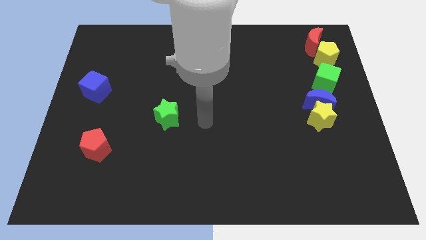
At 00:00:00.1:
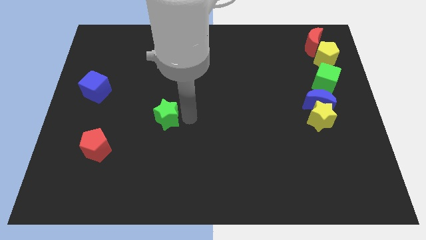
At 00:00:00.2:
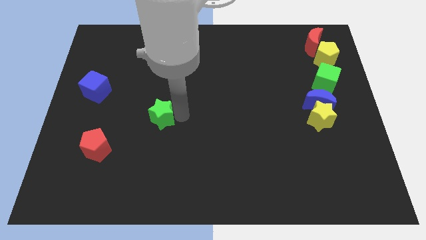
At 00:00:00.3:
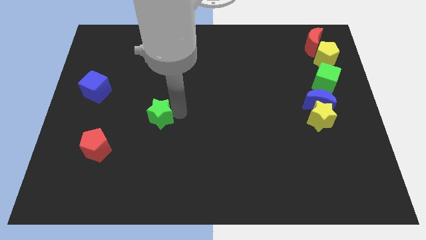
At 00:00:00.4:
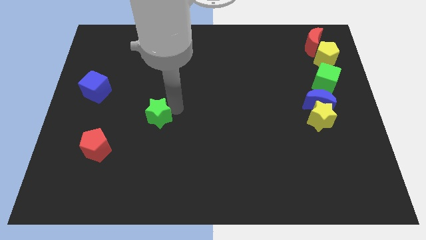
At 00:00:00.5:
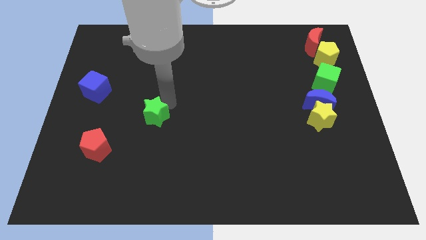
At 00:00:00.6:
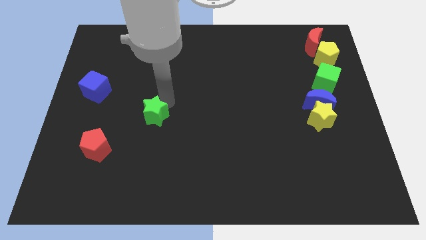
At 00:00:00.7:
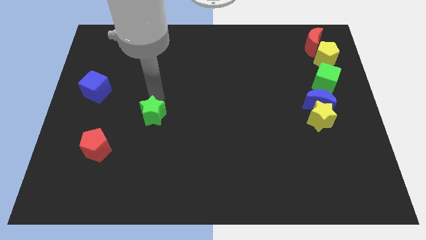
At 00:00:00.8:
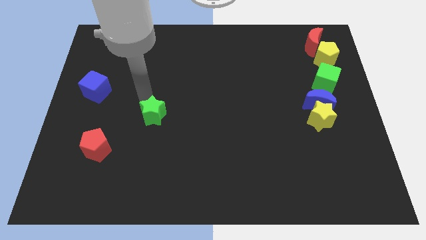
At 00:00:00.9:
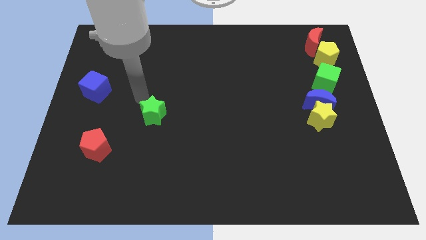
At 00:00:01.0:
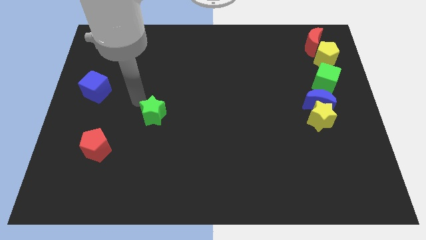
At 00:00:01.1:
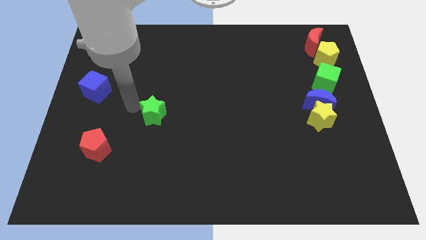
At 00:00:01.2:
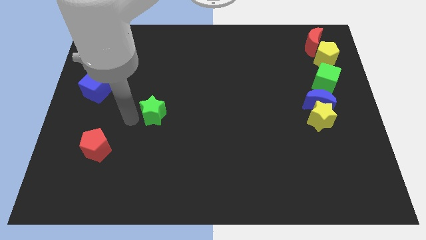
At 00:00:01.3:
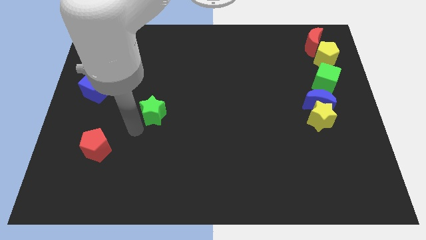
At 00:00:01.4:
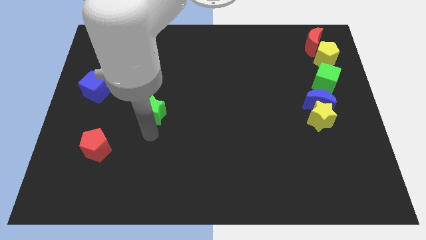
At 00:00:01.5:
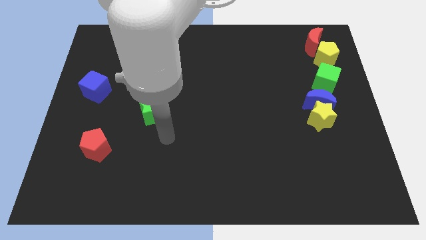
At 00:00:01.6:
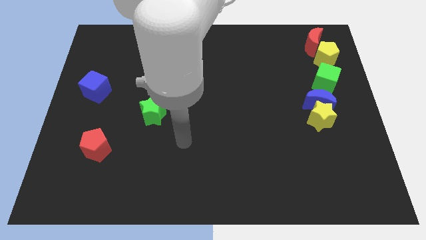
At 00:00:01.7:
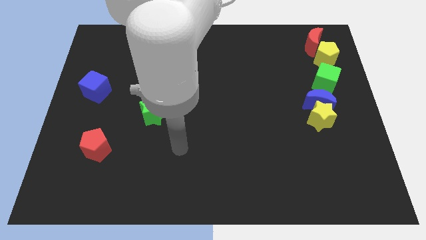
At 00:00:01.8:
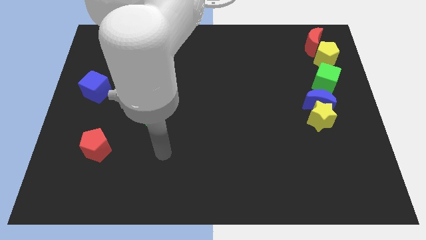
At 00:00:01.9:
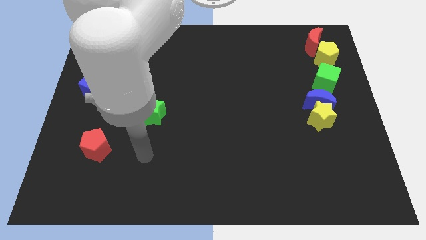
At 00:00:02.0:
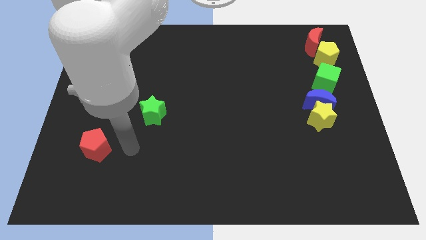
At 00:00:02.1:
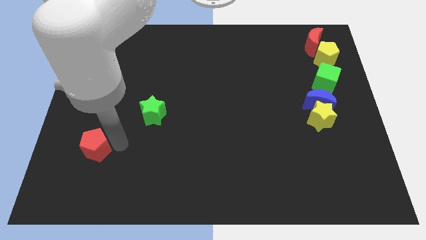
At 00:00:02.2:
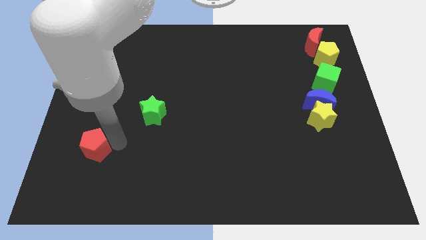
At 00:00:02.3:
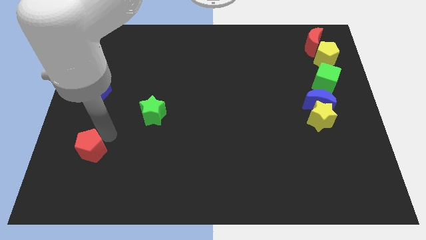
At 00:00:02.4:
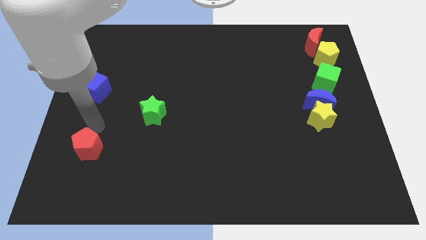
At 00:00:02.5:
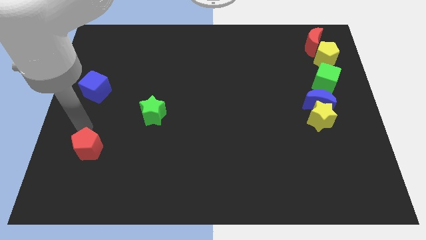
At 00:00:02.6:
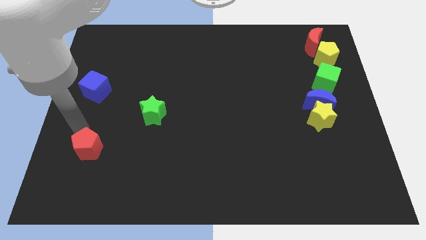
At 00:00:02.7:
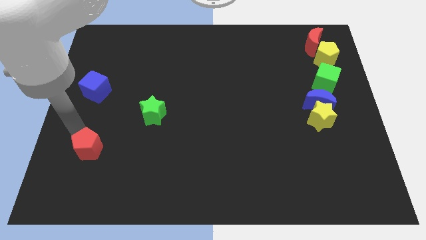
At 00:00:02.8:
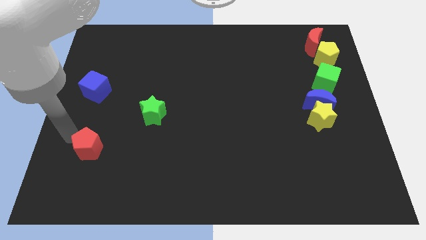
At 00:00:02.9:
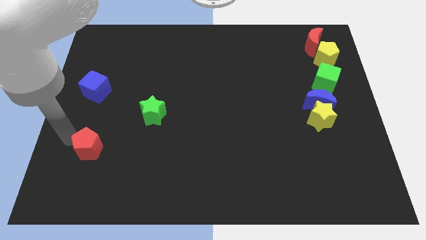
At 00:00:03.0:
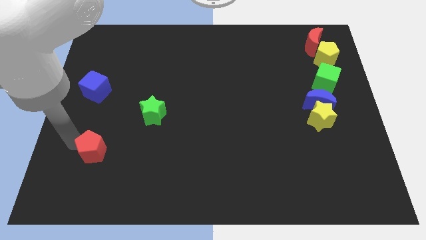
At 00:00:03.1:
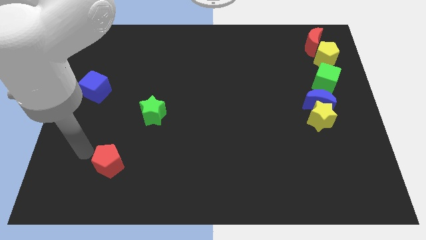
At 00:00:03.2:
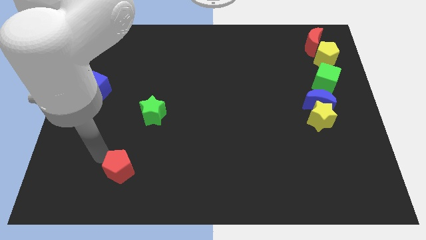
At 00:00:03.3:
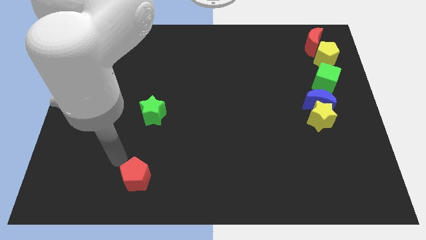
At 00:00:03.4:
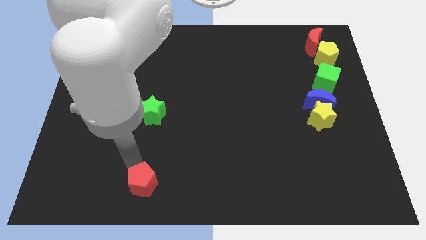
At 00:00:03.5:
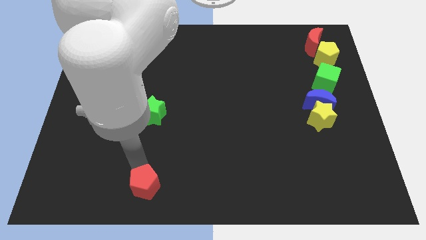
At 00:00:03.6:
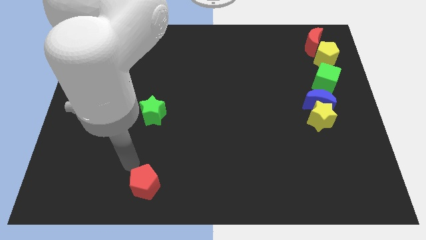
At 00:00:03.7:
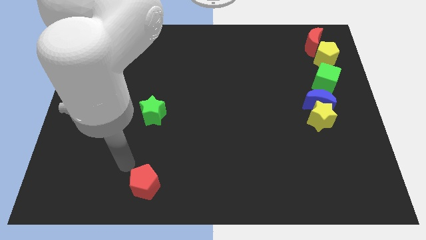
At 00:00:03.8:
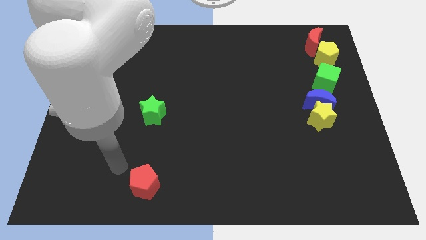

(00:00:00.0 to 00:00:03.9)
place the red pentagon below the green star

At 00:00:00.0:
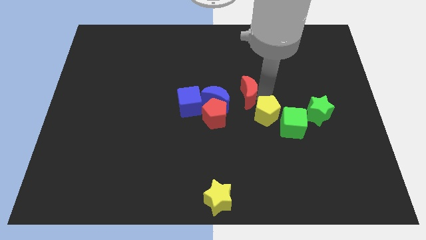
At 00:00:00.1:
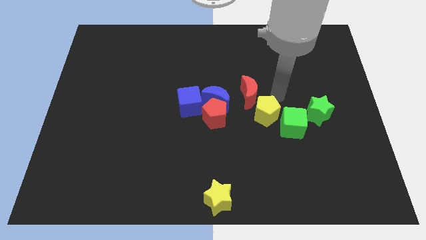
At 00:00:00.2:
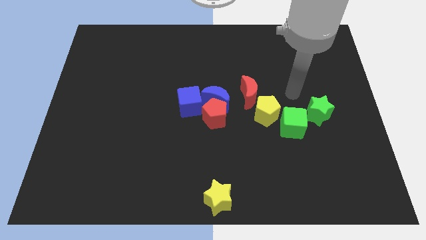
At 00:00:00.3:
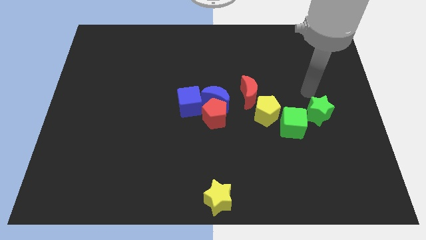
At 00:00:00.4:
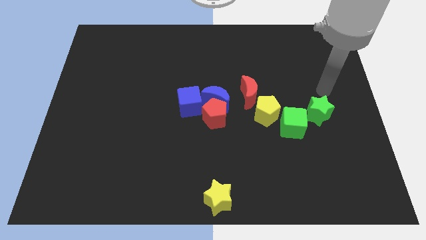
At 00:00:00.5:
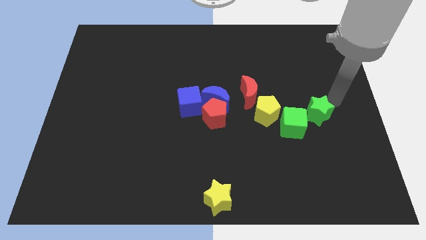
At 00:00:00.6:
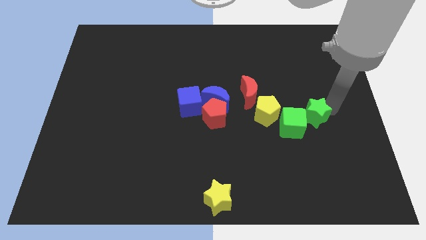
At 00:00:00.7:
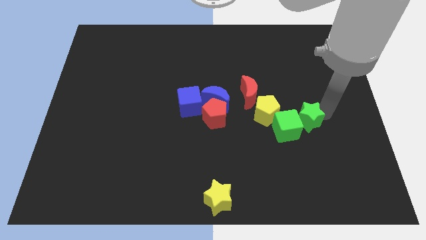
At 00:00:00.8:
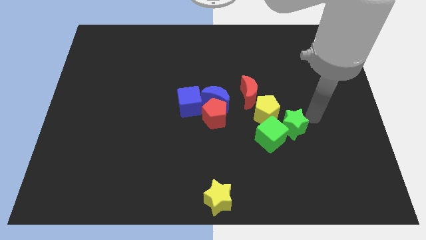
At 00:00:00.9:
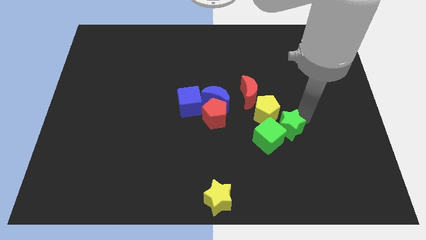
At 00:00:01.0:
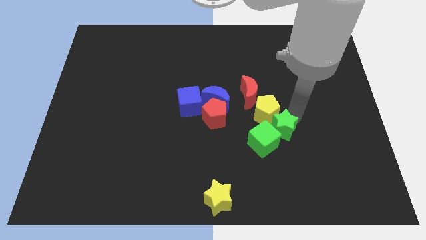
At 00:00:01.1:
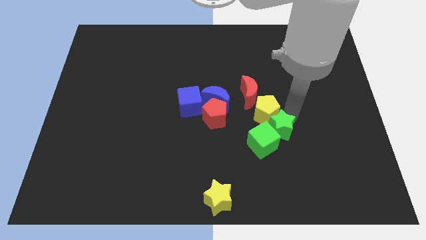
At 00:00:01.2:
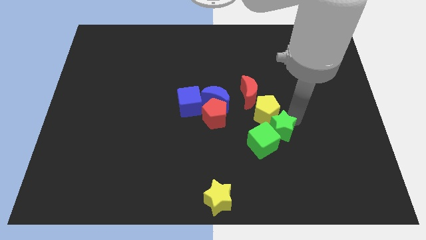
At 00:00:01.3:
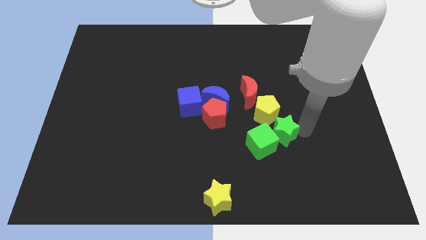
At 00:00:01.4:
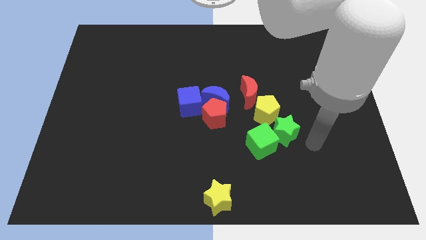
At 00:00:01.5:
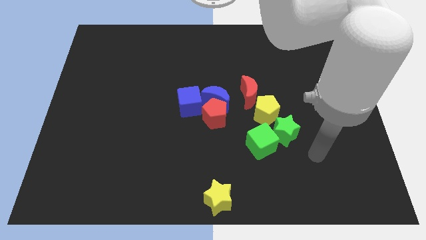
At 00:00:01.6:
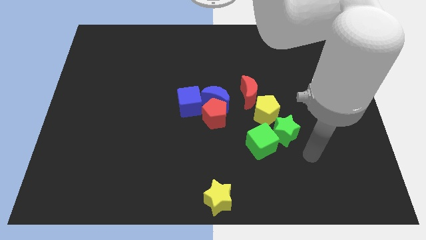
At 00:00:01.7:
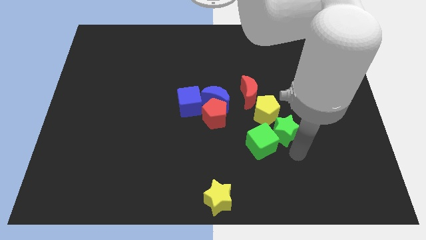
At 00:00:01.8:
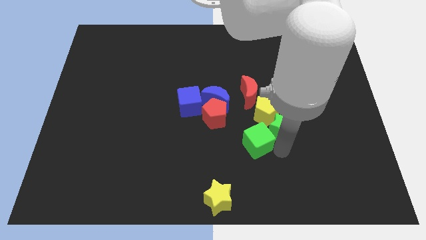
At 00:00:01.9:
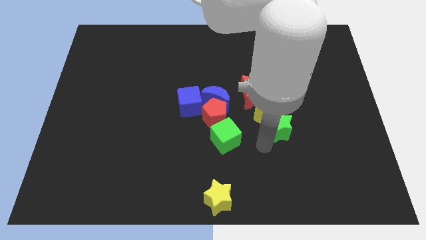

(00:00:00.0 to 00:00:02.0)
push the green blocks towards the bottom center

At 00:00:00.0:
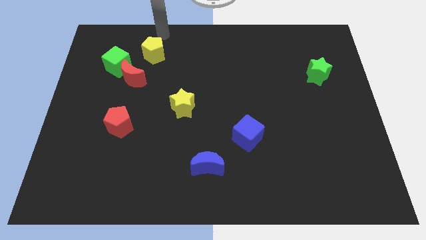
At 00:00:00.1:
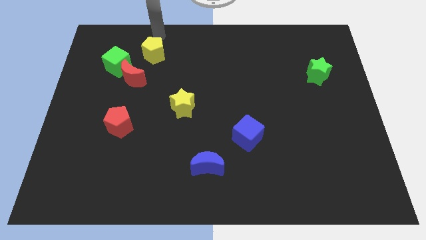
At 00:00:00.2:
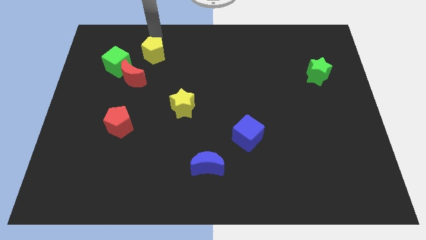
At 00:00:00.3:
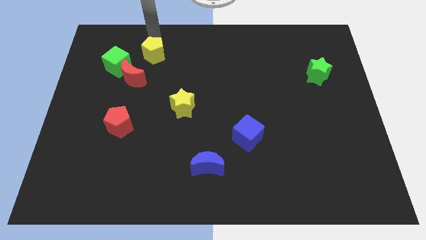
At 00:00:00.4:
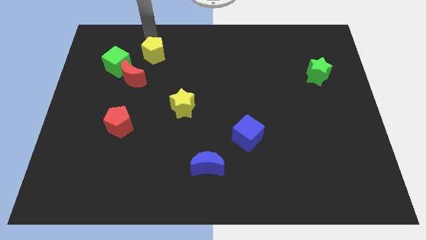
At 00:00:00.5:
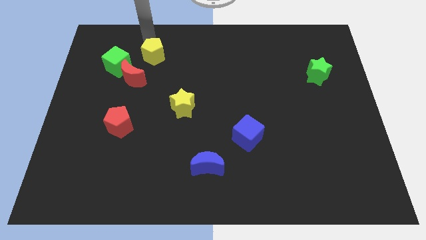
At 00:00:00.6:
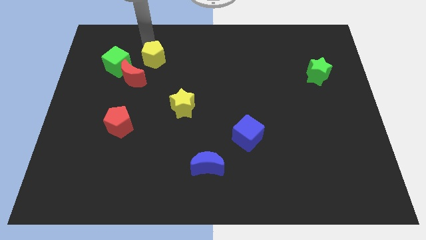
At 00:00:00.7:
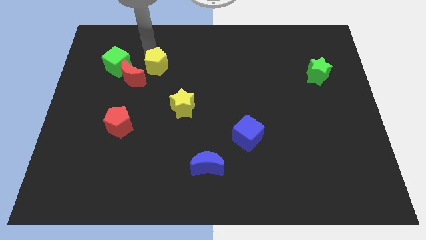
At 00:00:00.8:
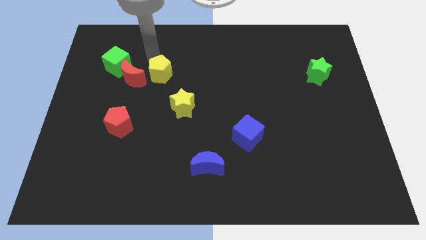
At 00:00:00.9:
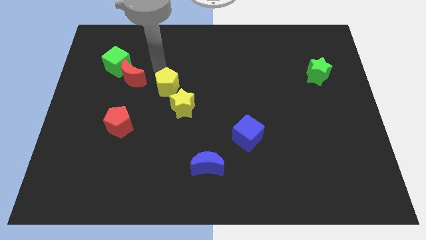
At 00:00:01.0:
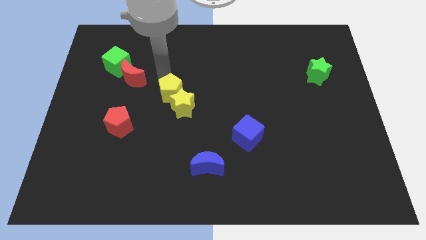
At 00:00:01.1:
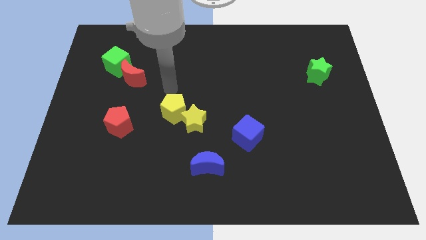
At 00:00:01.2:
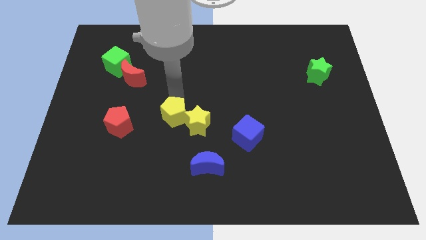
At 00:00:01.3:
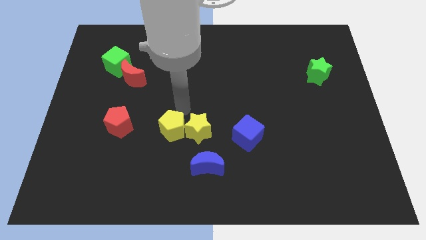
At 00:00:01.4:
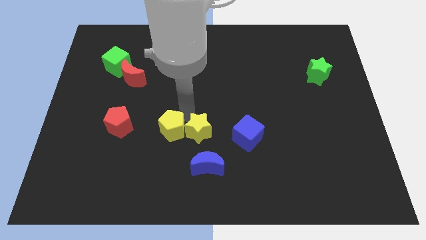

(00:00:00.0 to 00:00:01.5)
push the yellow pentagon close to the yellow star to the center of the board

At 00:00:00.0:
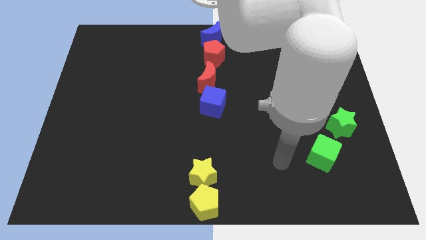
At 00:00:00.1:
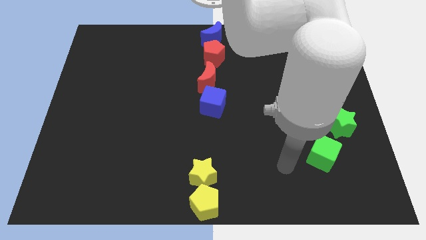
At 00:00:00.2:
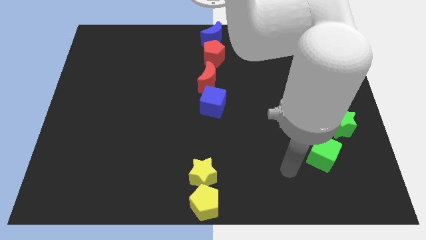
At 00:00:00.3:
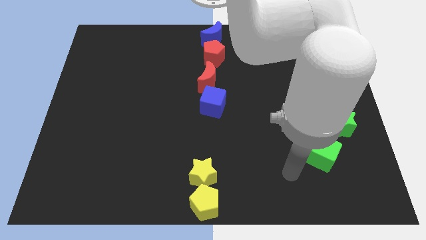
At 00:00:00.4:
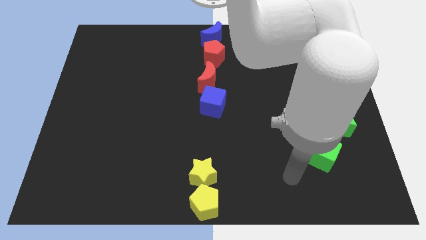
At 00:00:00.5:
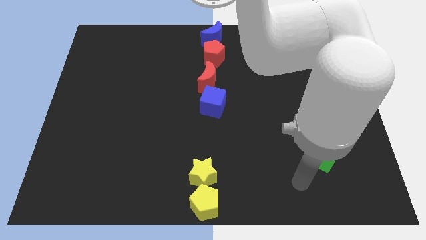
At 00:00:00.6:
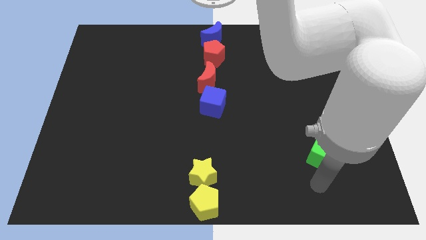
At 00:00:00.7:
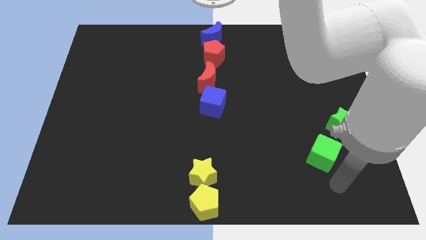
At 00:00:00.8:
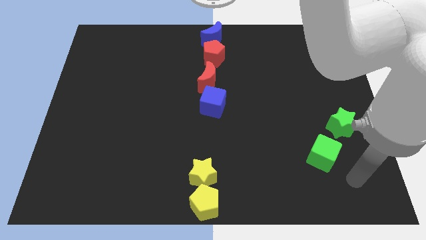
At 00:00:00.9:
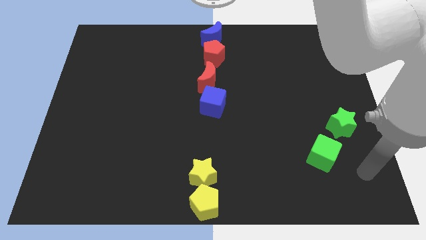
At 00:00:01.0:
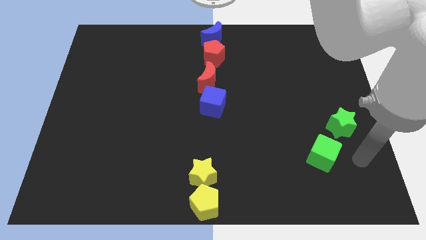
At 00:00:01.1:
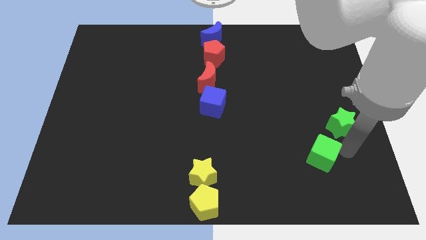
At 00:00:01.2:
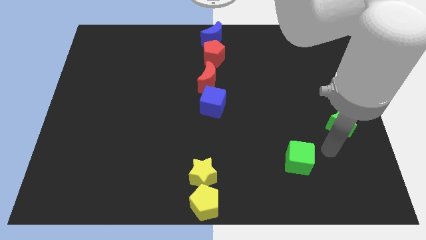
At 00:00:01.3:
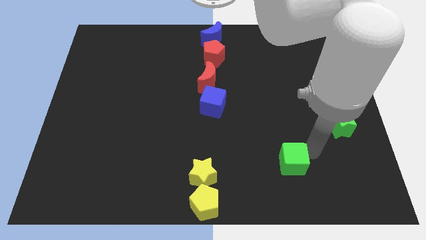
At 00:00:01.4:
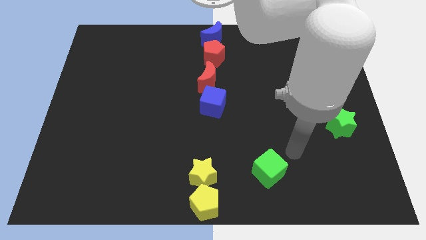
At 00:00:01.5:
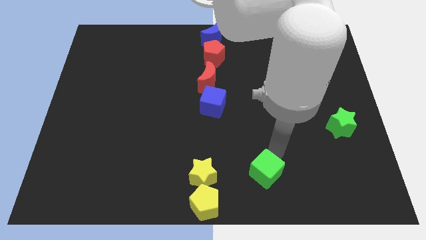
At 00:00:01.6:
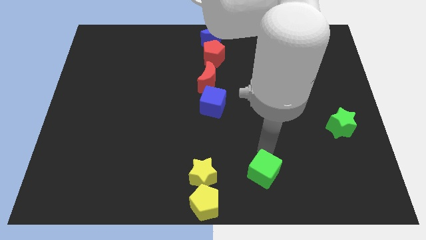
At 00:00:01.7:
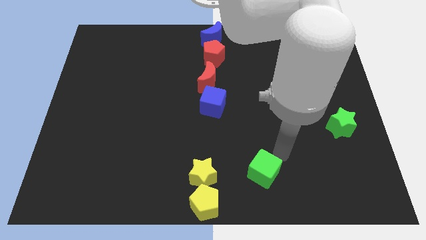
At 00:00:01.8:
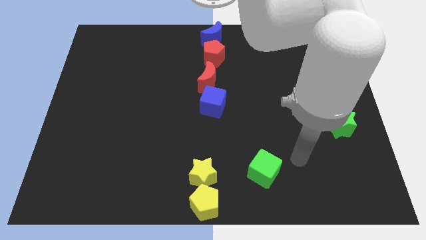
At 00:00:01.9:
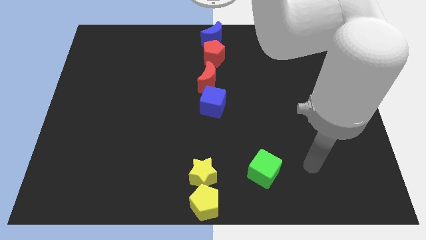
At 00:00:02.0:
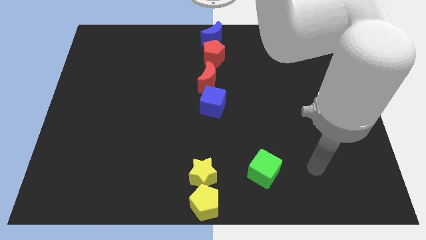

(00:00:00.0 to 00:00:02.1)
separate the green cube from the green star
